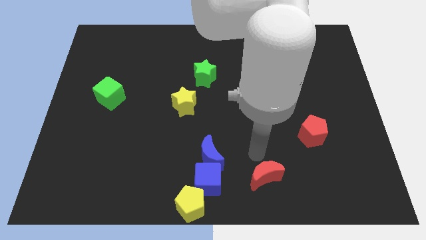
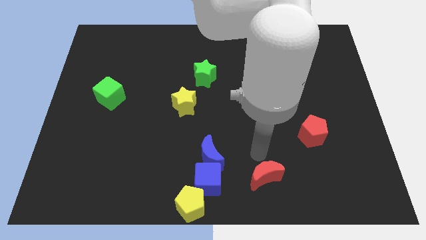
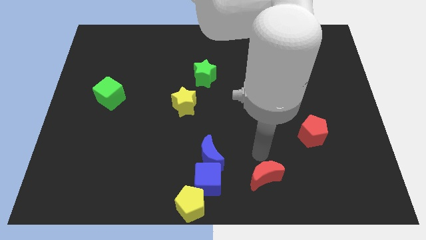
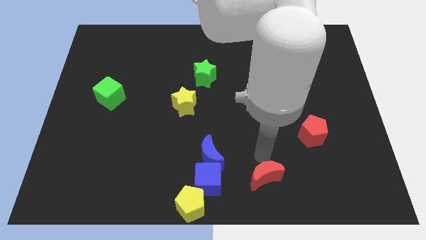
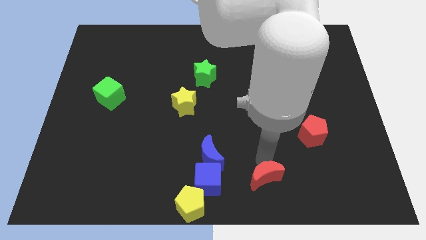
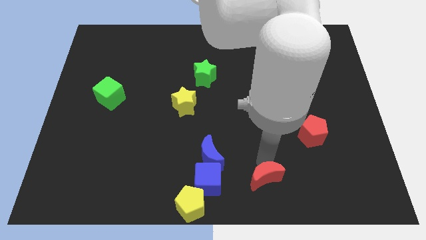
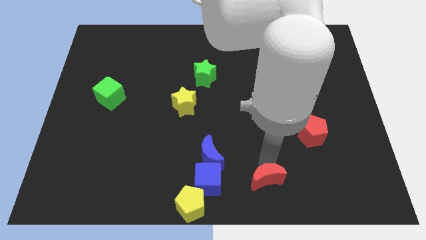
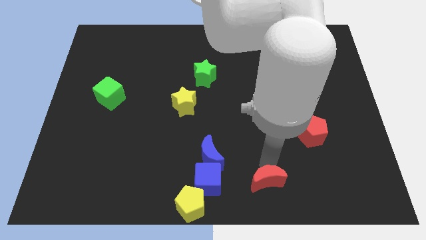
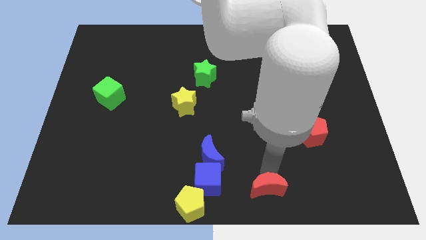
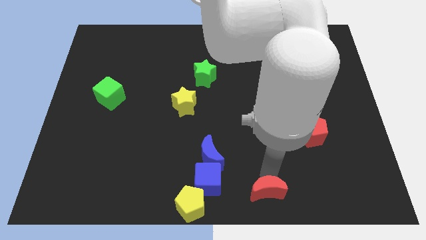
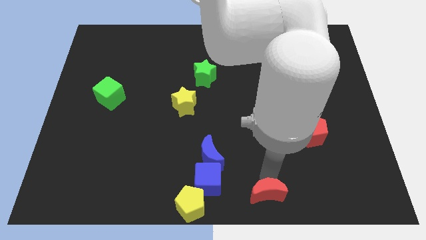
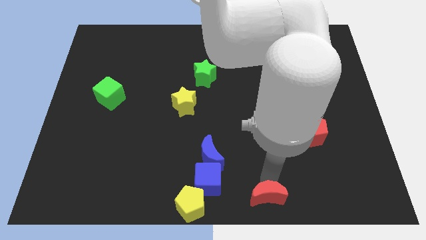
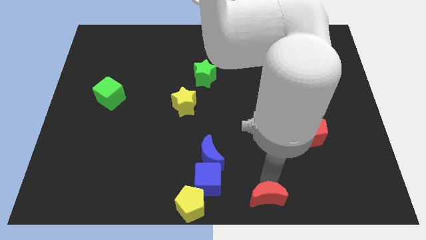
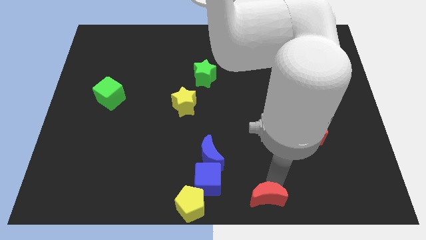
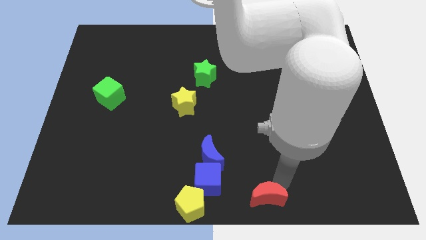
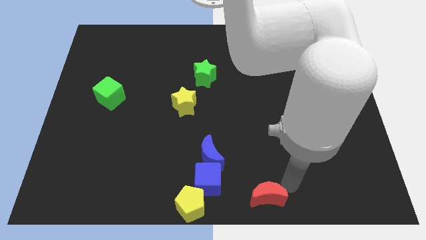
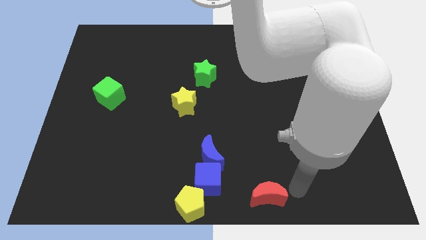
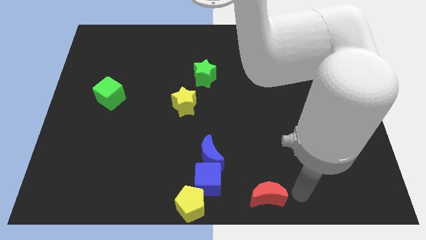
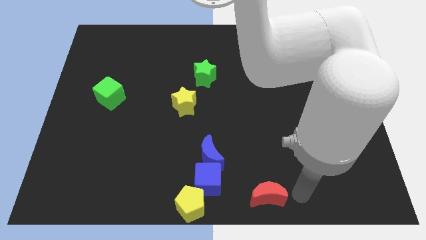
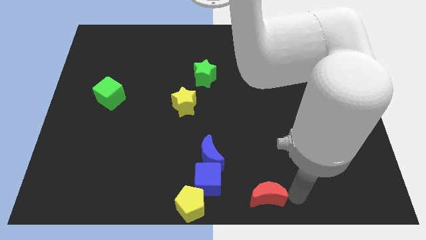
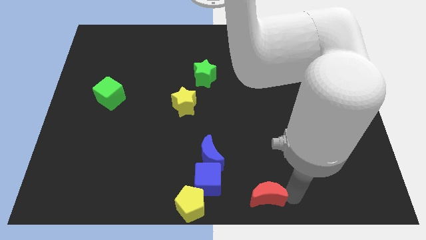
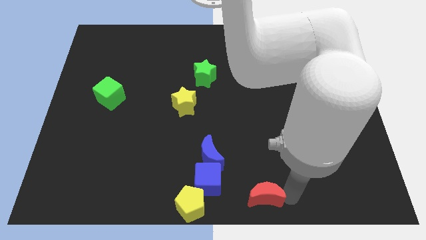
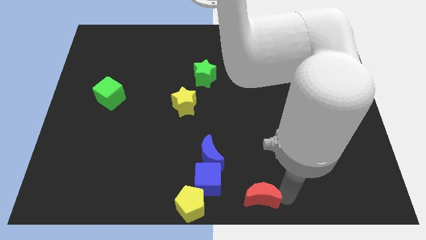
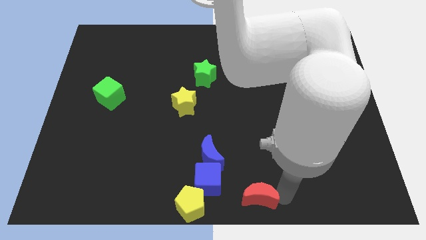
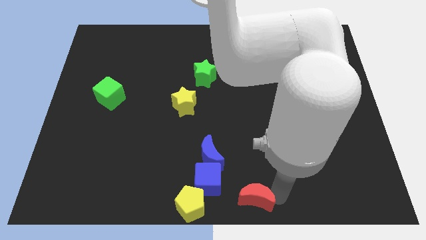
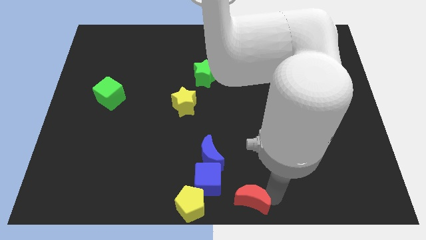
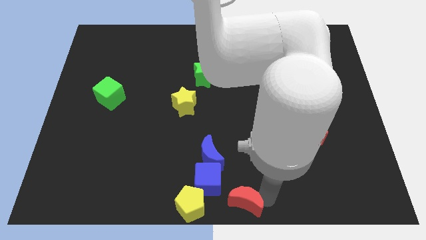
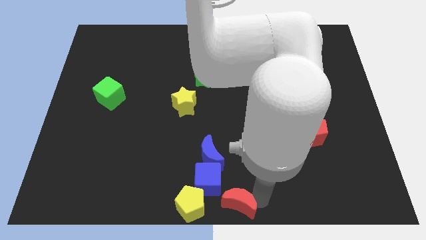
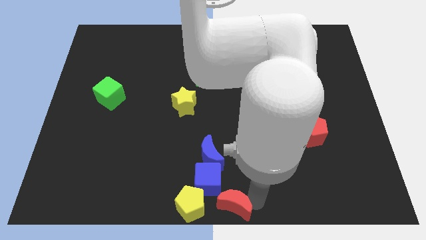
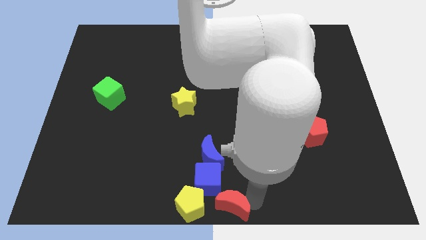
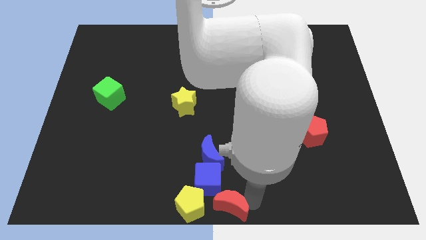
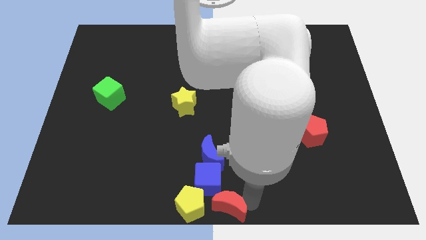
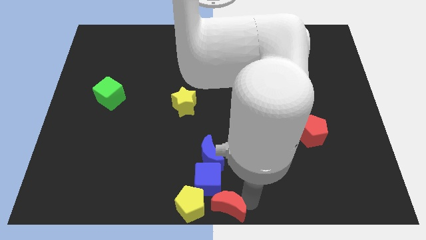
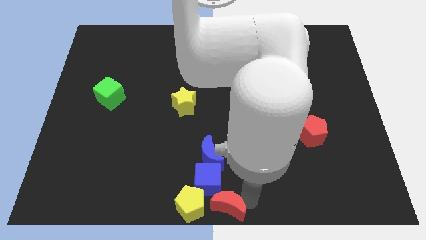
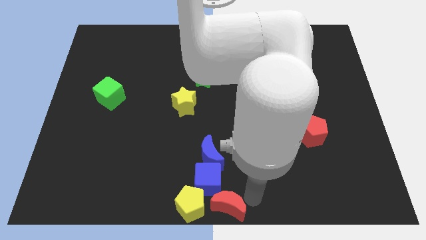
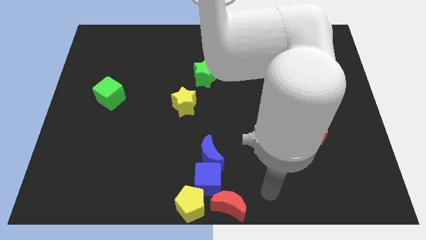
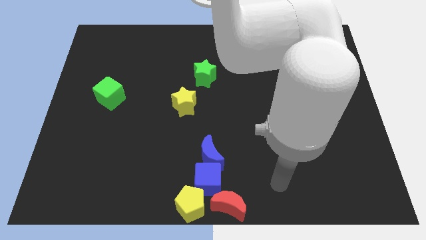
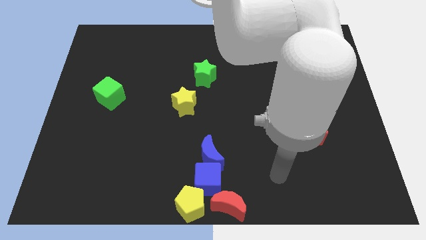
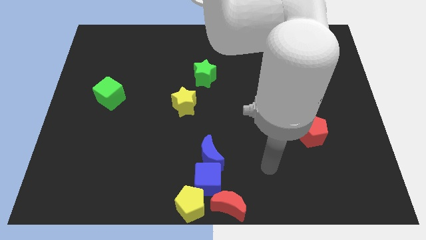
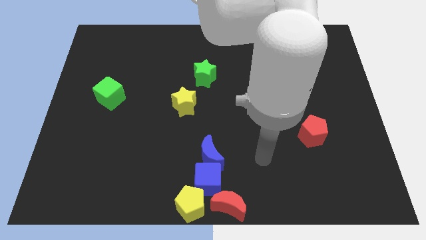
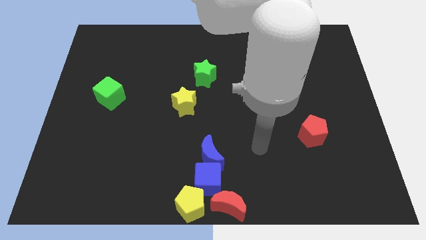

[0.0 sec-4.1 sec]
push the red crescent to the right of the yellow pentagon

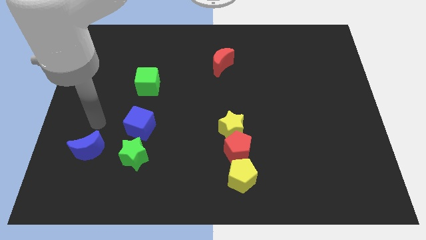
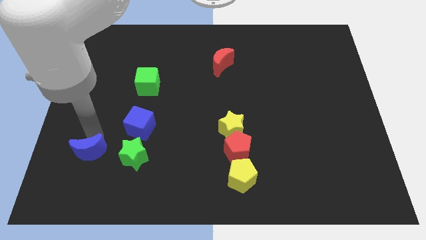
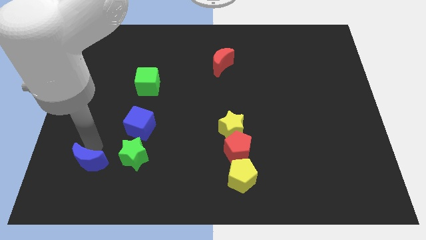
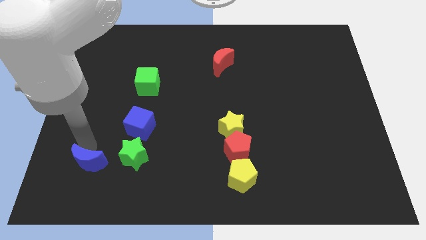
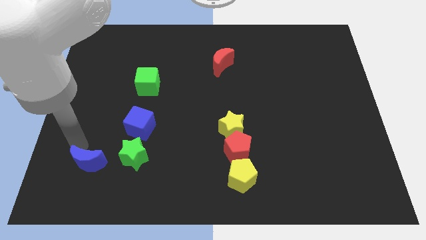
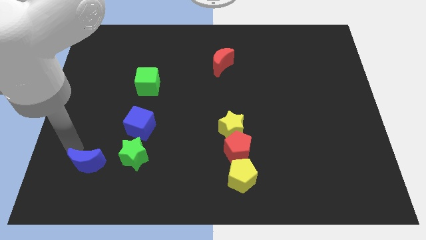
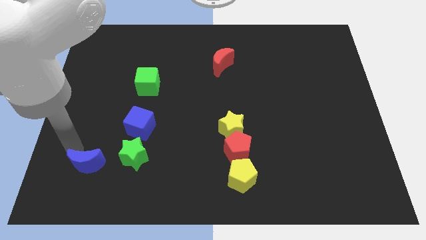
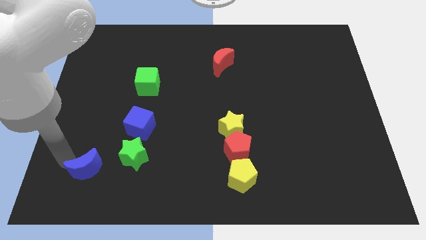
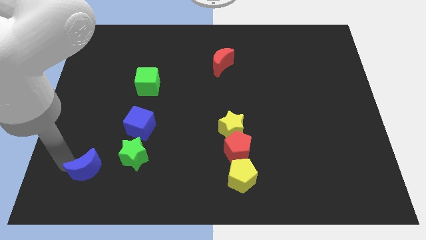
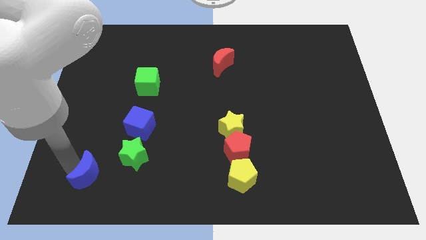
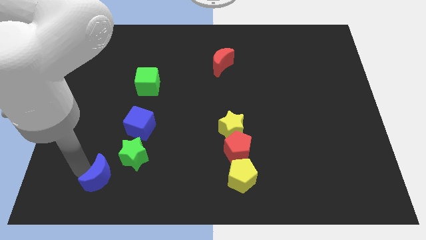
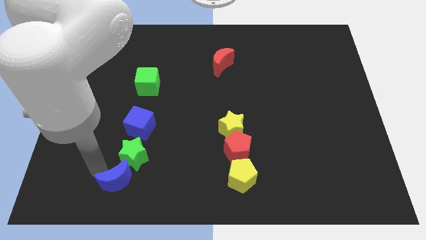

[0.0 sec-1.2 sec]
push the blue moon slightly to the right

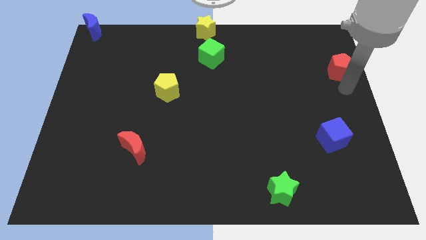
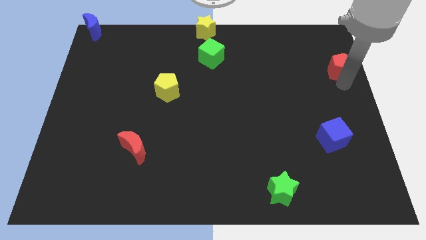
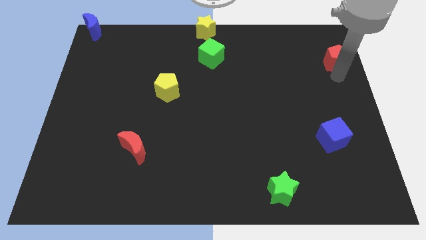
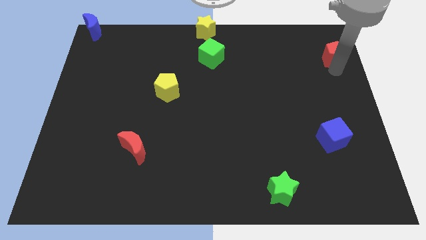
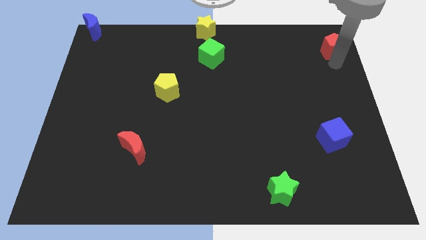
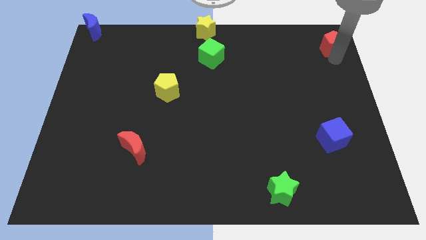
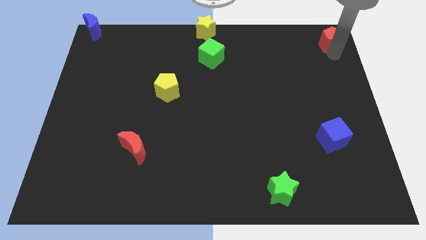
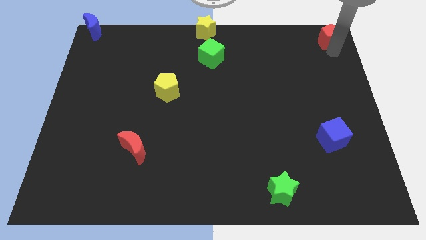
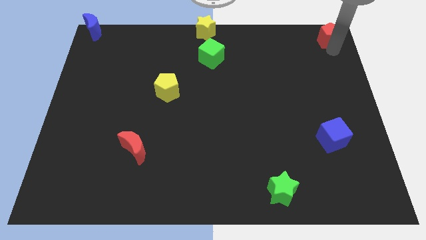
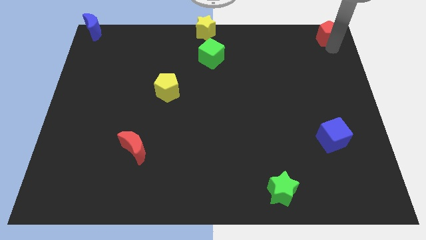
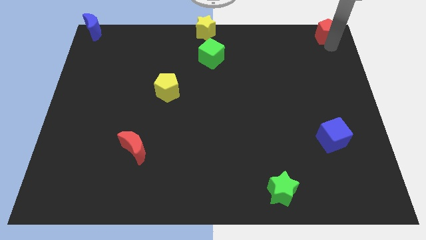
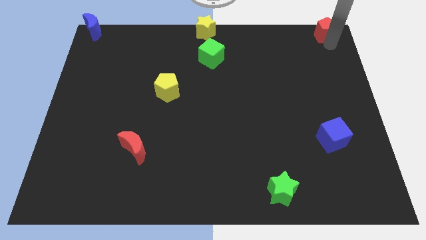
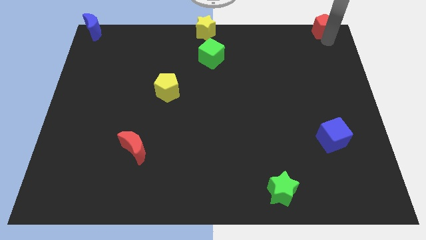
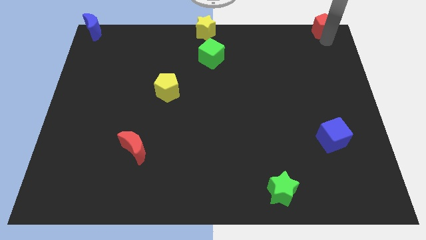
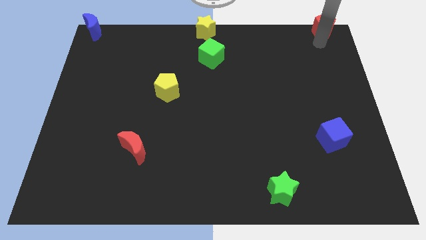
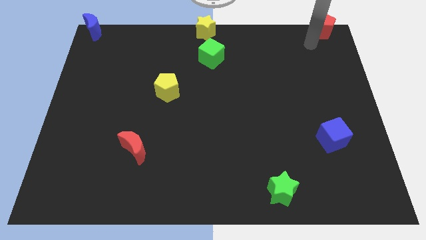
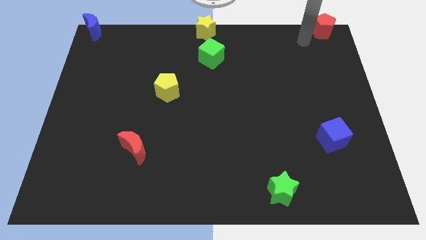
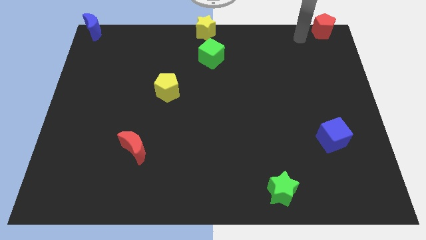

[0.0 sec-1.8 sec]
move the red pentagon towards the top right side of the board

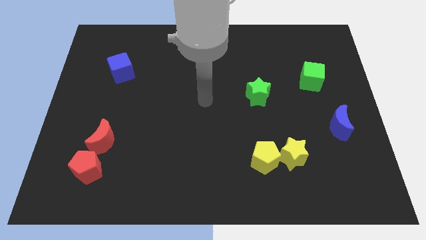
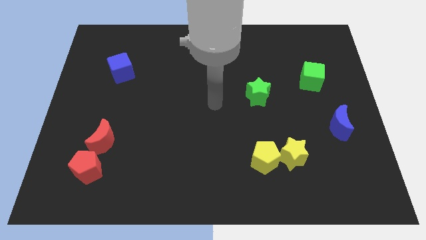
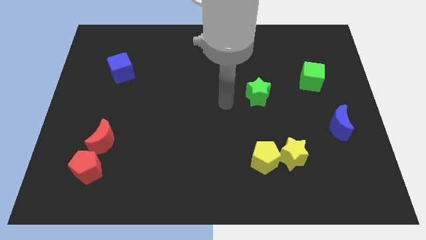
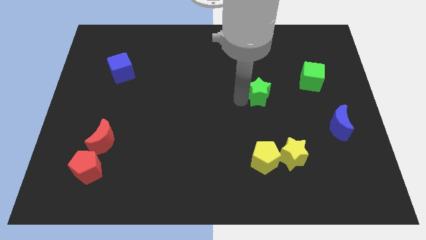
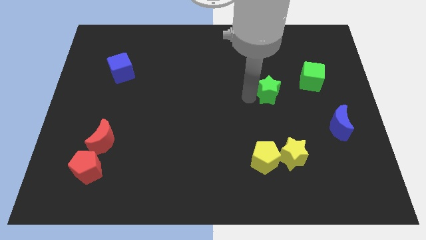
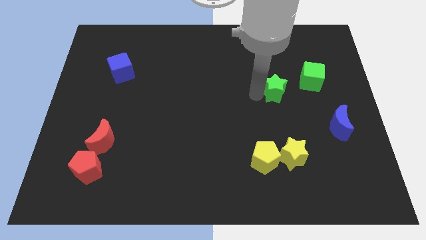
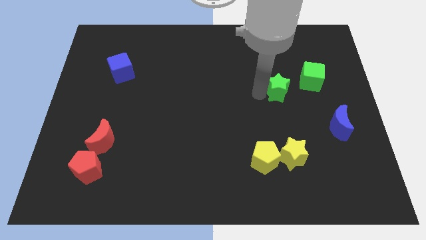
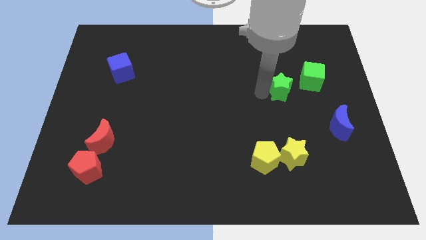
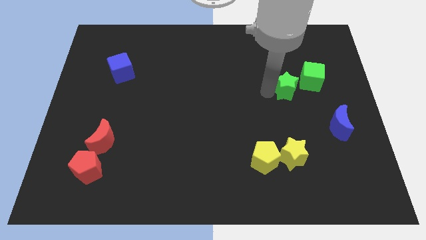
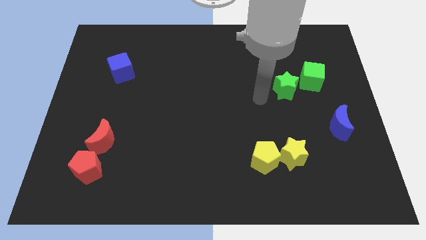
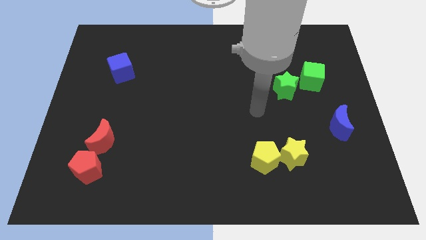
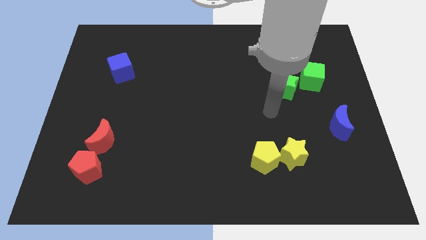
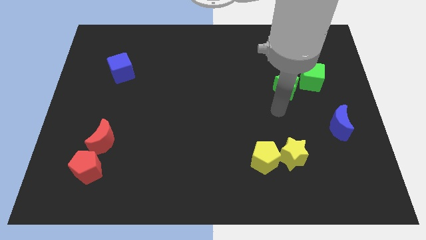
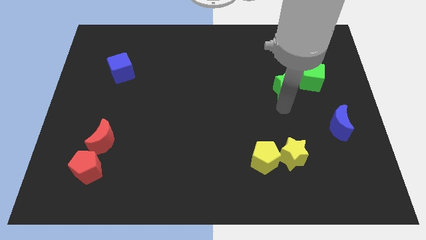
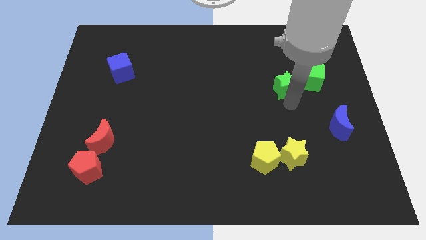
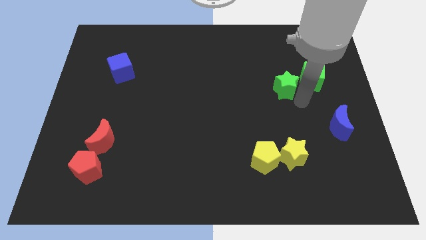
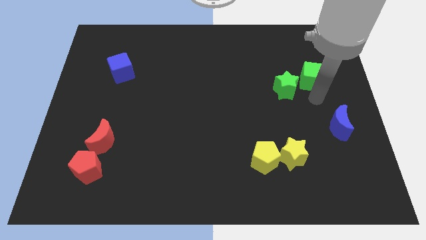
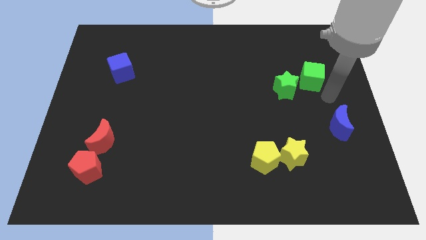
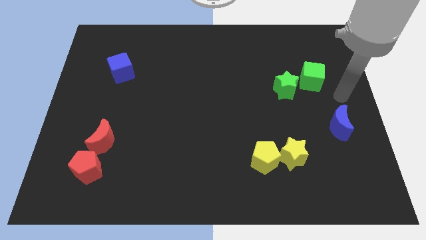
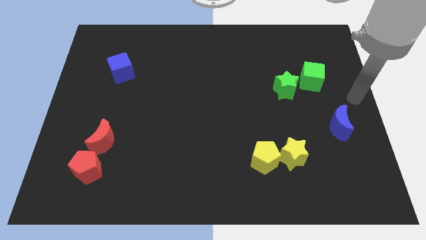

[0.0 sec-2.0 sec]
move the green star to the left of the green cube

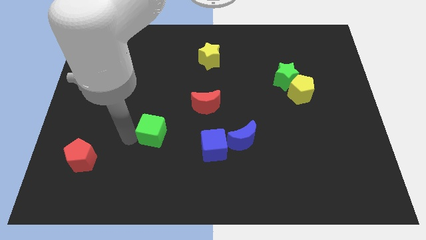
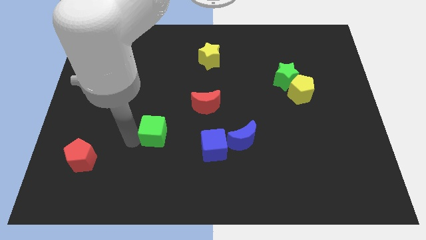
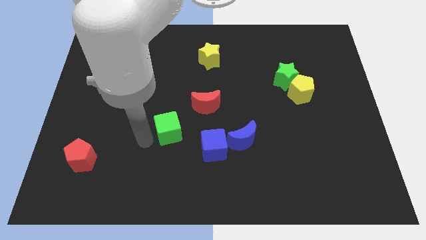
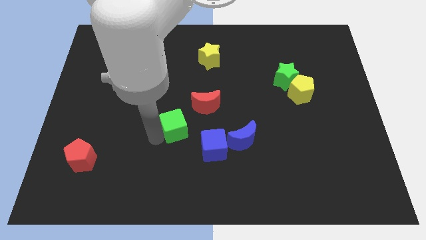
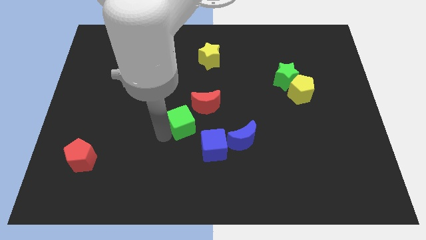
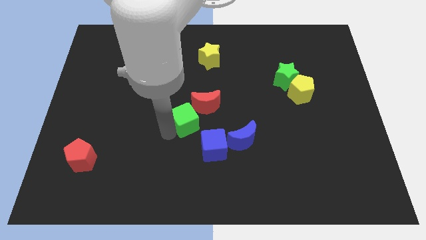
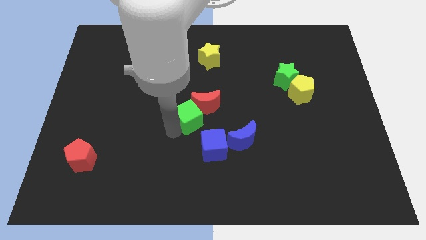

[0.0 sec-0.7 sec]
place green cube to the top left of blue cube
